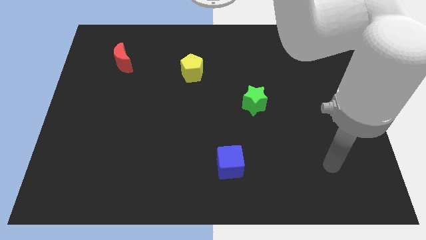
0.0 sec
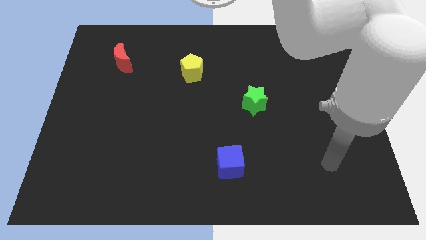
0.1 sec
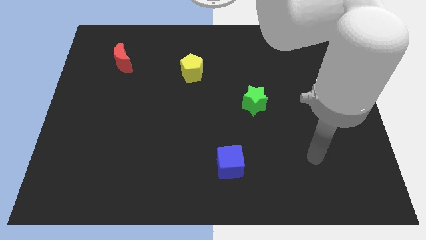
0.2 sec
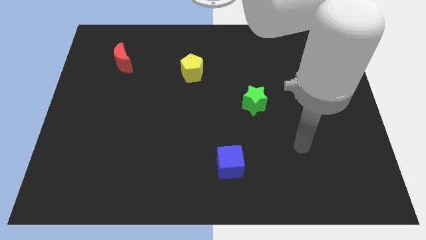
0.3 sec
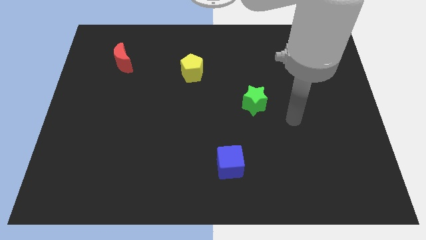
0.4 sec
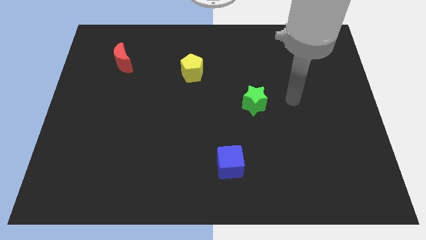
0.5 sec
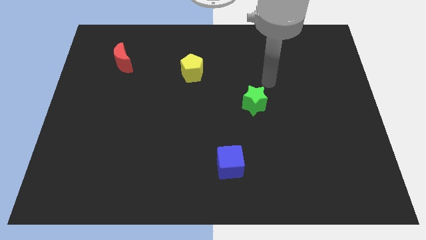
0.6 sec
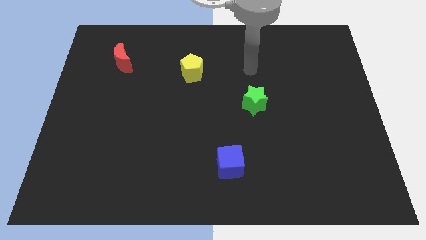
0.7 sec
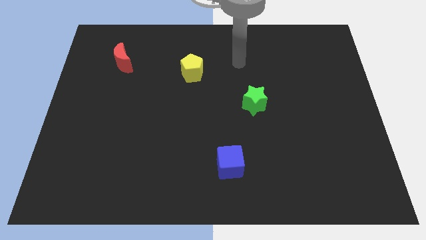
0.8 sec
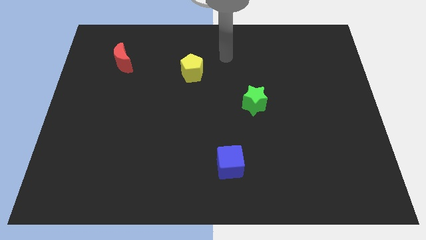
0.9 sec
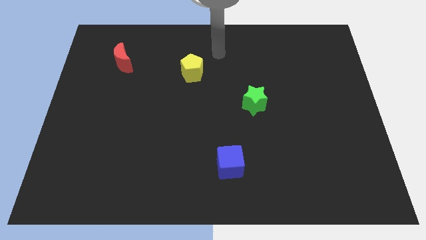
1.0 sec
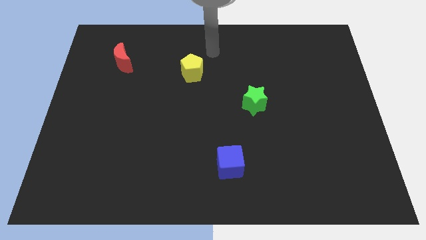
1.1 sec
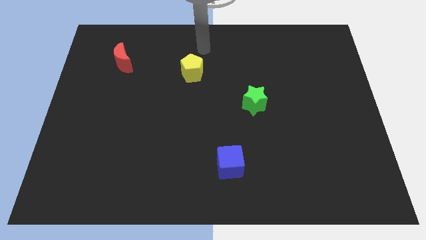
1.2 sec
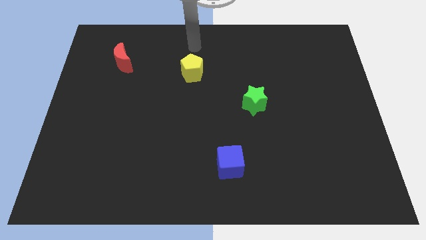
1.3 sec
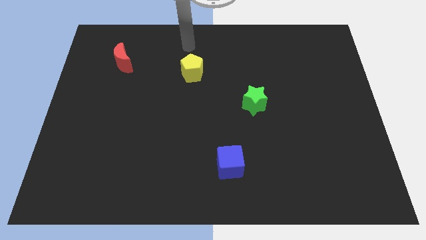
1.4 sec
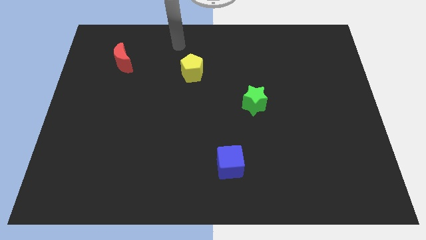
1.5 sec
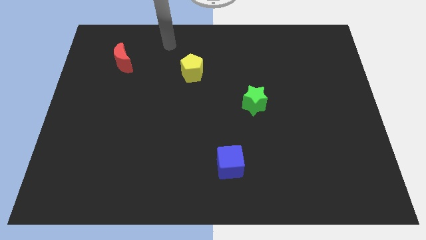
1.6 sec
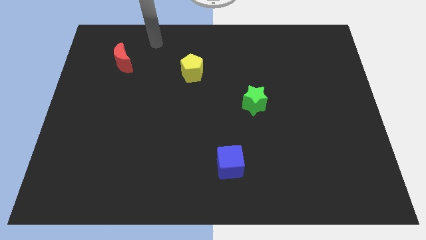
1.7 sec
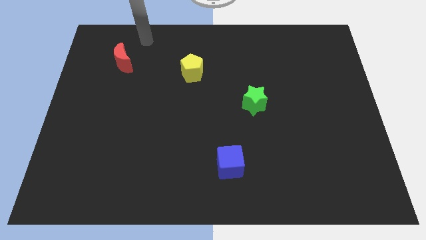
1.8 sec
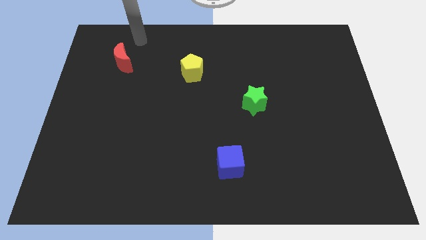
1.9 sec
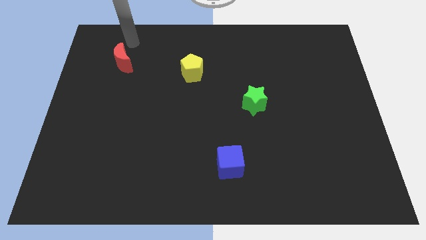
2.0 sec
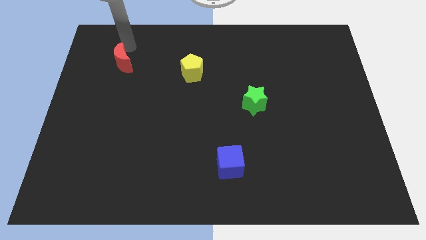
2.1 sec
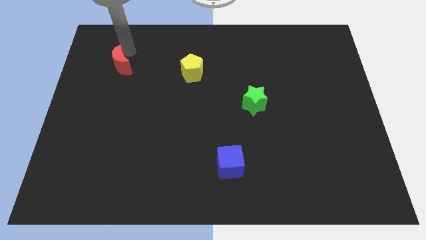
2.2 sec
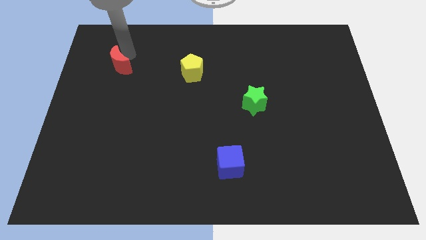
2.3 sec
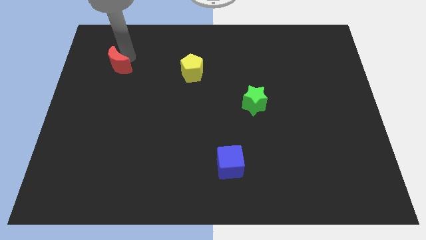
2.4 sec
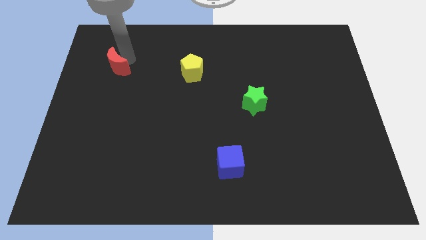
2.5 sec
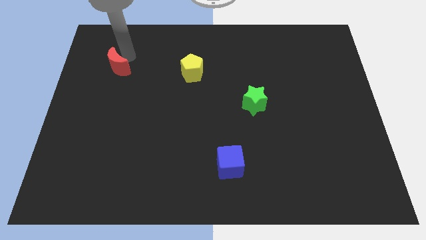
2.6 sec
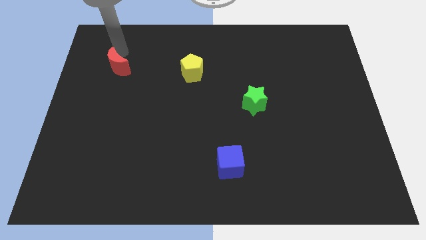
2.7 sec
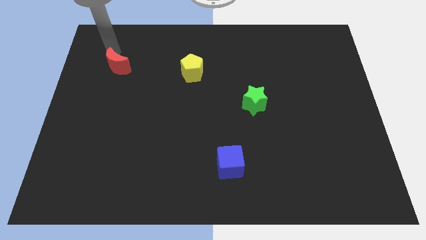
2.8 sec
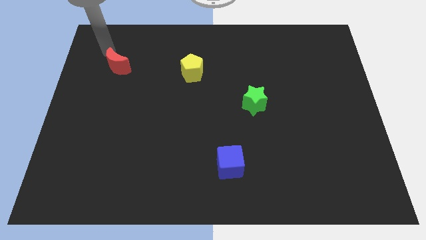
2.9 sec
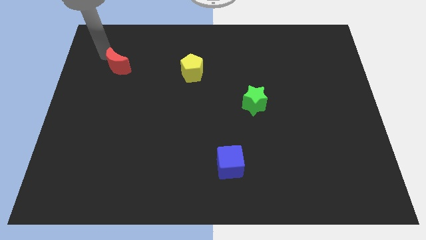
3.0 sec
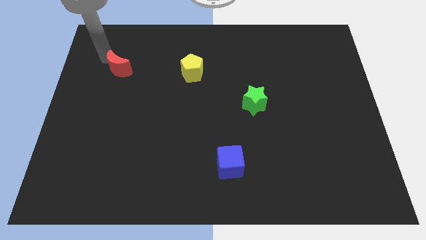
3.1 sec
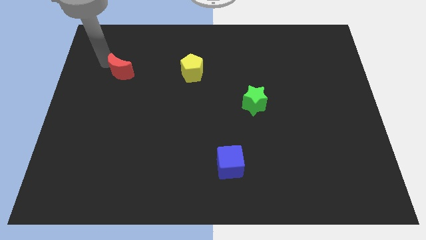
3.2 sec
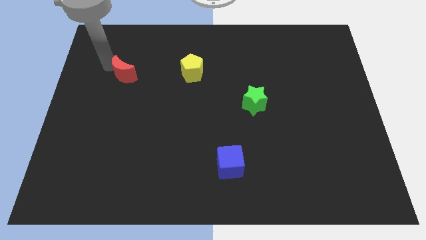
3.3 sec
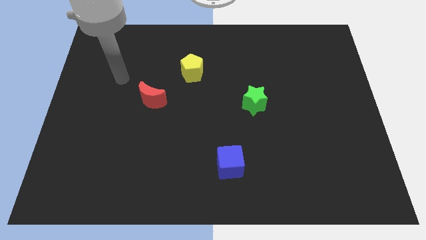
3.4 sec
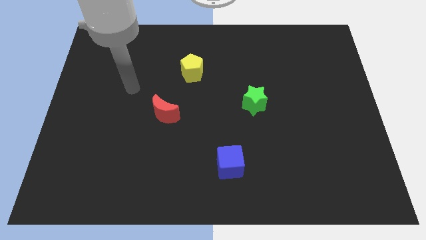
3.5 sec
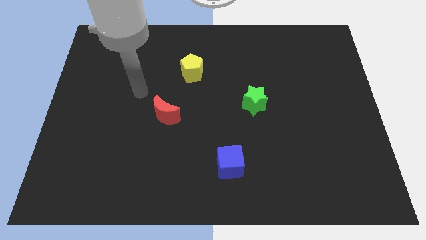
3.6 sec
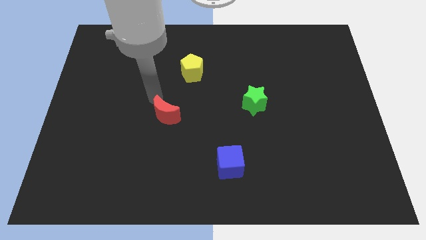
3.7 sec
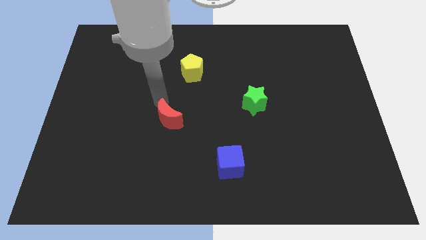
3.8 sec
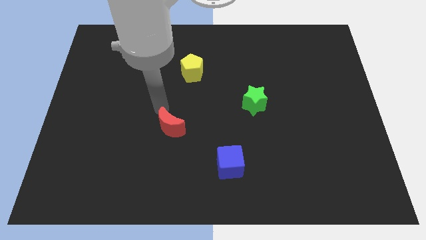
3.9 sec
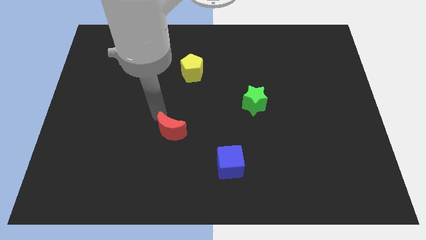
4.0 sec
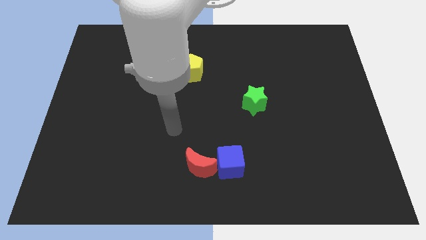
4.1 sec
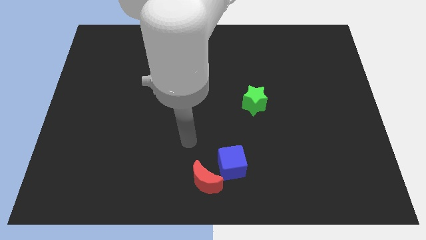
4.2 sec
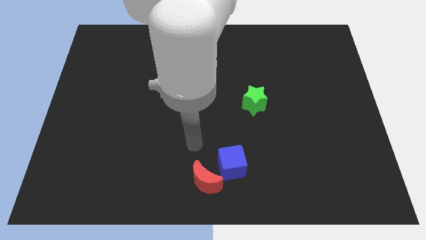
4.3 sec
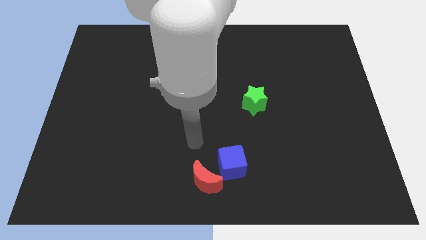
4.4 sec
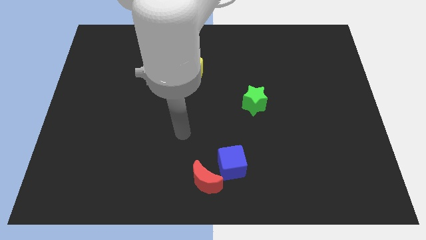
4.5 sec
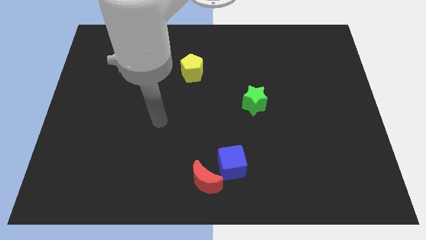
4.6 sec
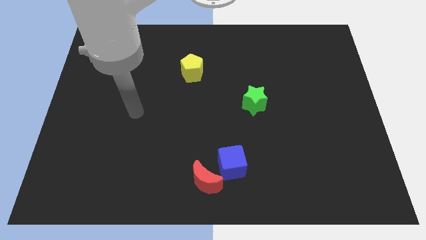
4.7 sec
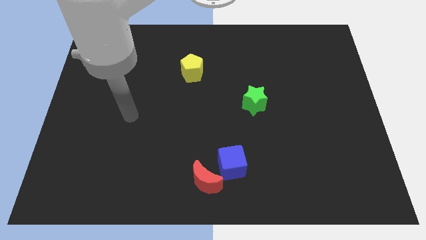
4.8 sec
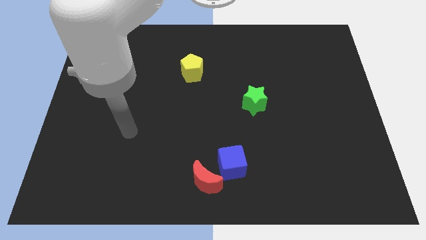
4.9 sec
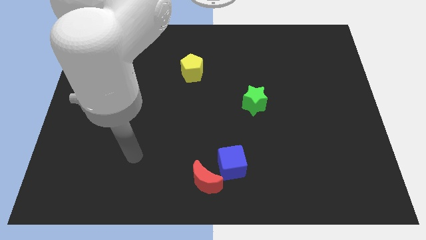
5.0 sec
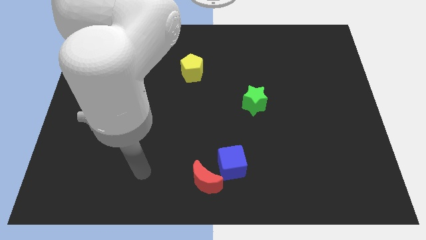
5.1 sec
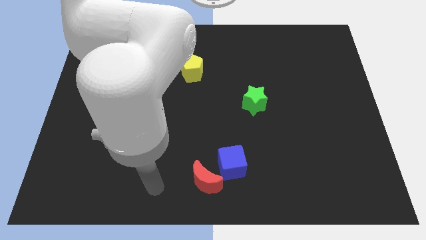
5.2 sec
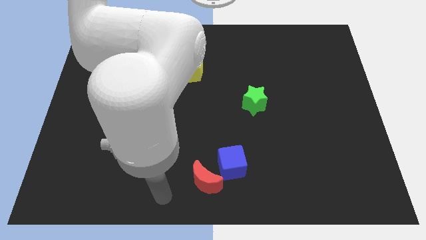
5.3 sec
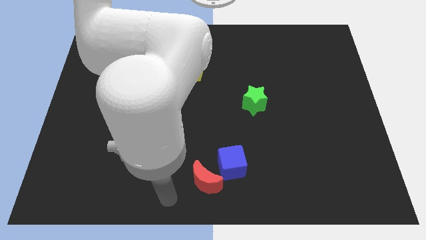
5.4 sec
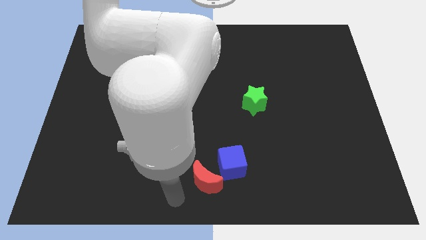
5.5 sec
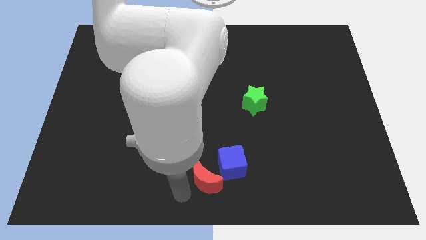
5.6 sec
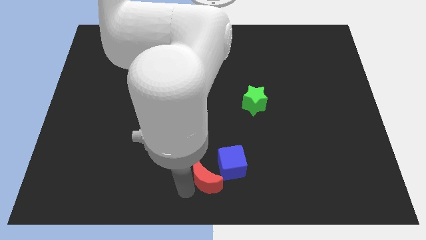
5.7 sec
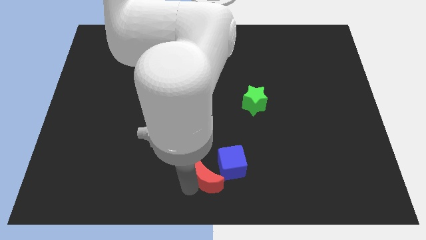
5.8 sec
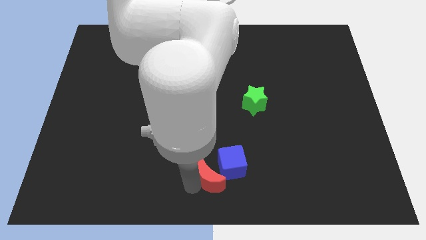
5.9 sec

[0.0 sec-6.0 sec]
push the red moon to the blue block

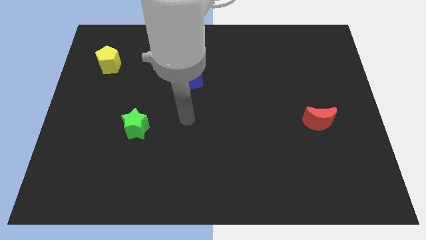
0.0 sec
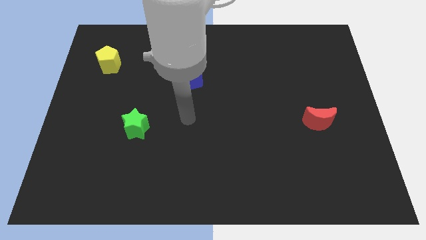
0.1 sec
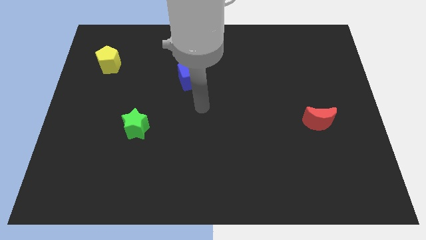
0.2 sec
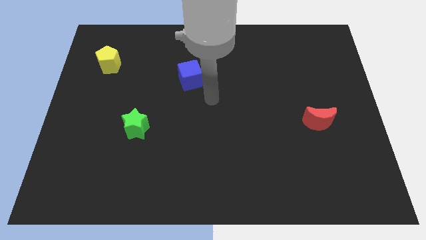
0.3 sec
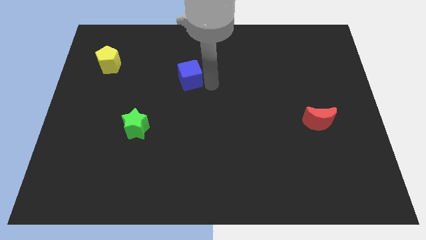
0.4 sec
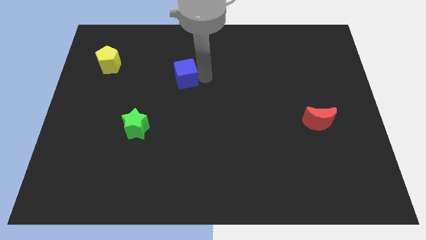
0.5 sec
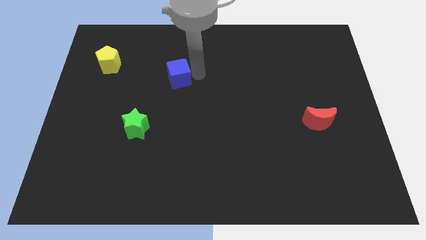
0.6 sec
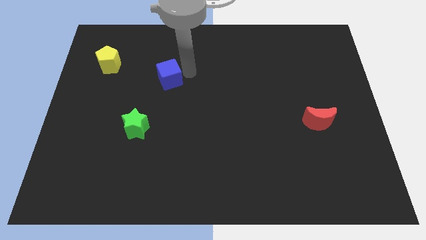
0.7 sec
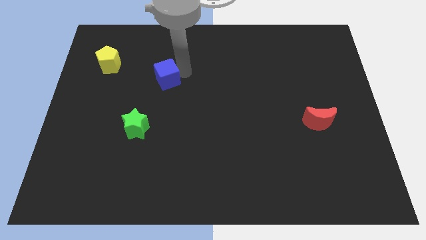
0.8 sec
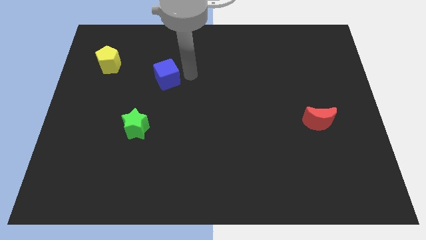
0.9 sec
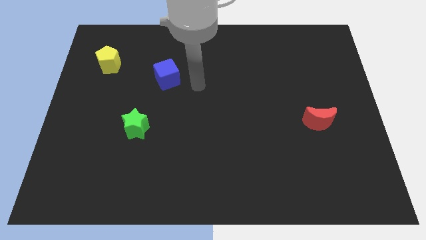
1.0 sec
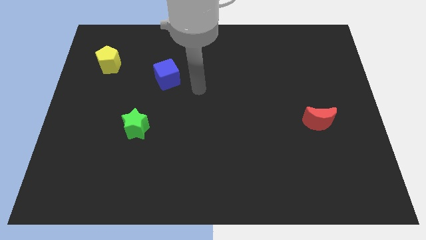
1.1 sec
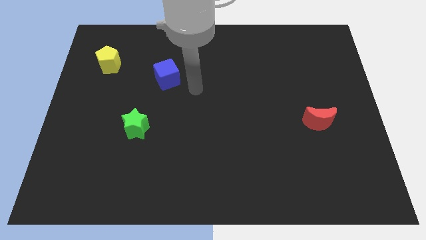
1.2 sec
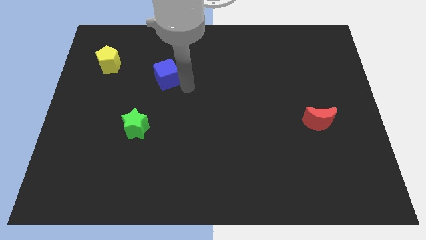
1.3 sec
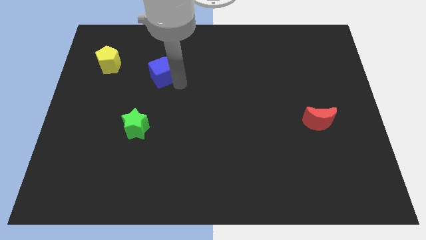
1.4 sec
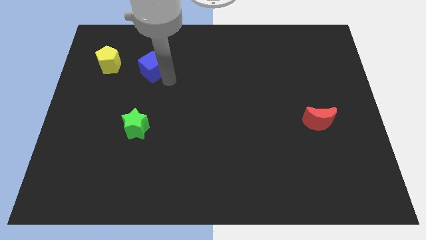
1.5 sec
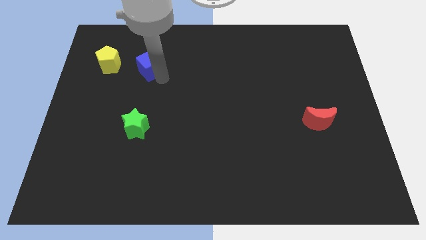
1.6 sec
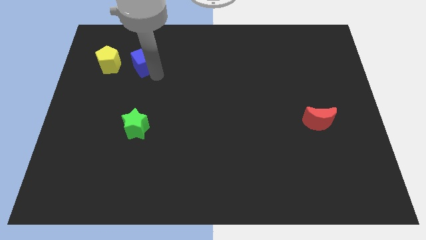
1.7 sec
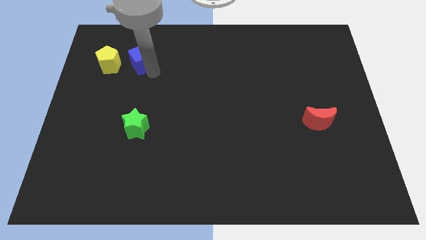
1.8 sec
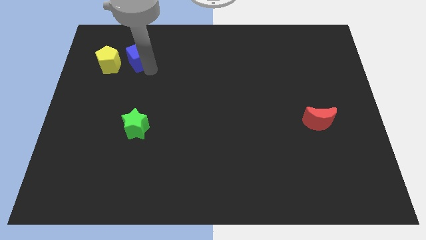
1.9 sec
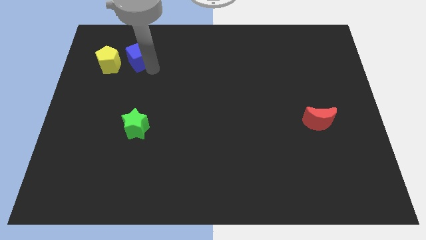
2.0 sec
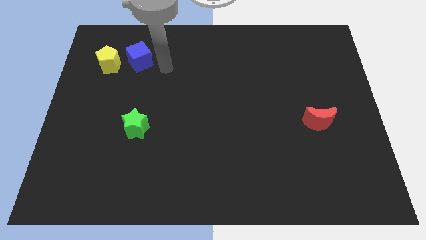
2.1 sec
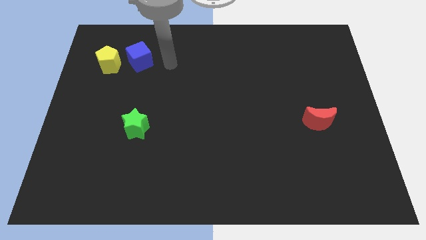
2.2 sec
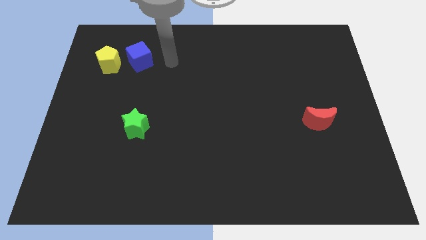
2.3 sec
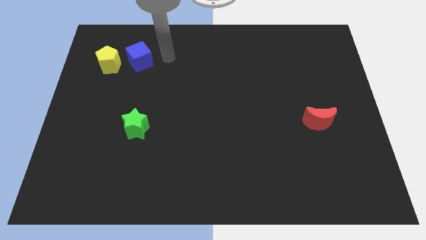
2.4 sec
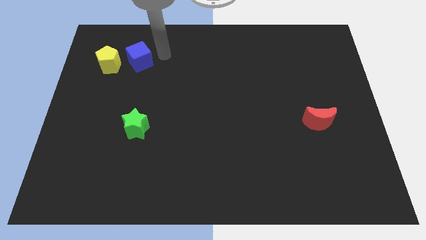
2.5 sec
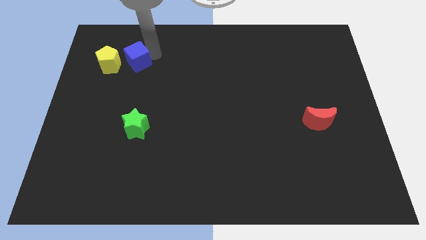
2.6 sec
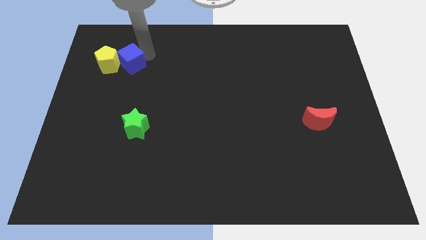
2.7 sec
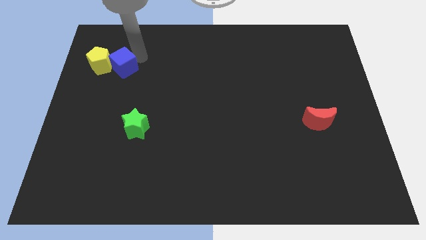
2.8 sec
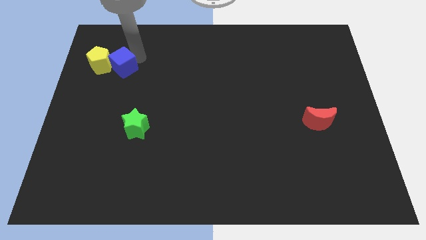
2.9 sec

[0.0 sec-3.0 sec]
push the blue cube to the pentagon
